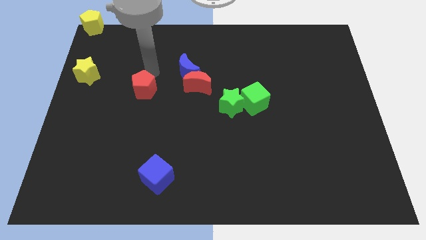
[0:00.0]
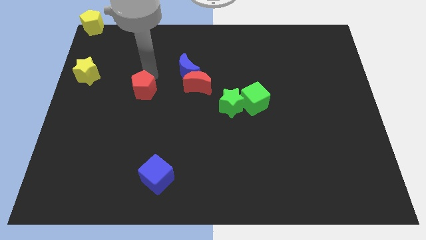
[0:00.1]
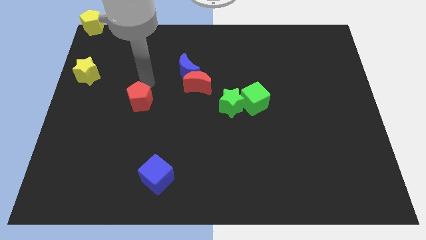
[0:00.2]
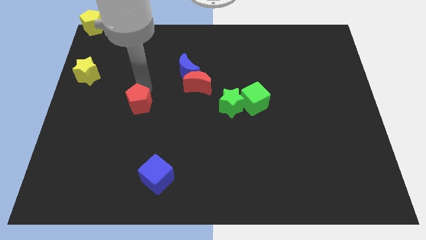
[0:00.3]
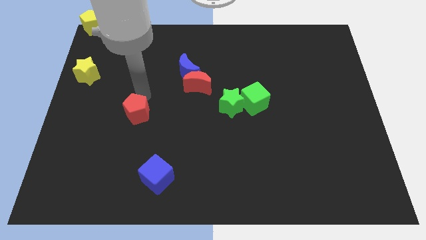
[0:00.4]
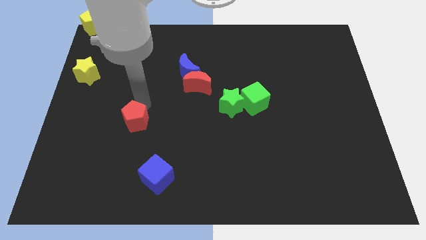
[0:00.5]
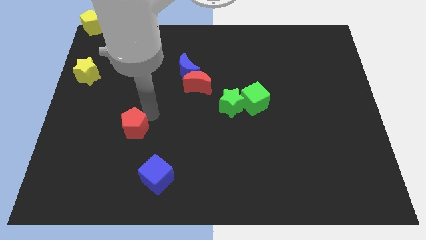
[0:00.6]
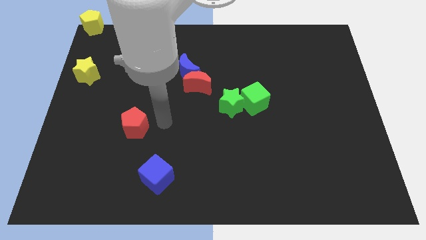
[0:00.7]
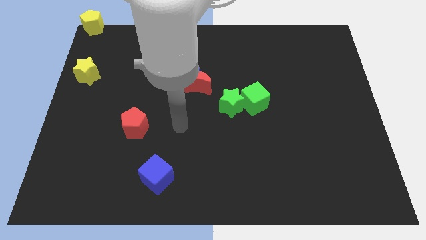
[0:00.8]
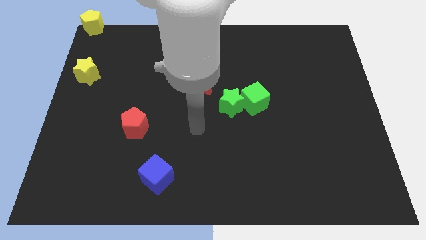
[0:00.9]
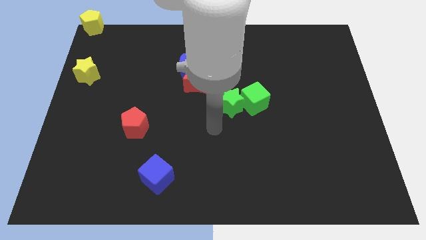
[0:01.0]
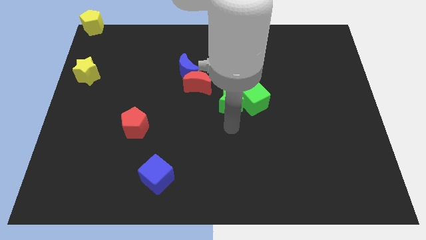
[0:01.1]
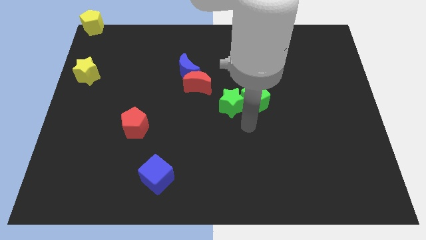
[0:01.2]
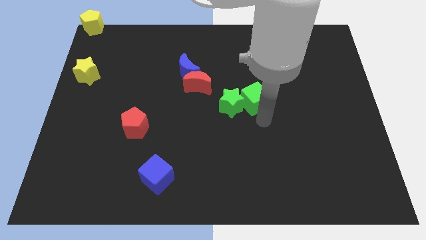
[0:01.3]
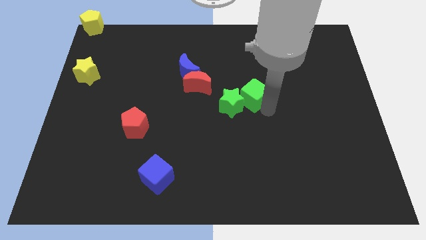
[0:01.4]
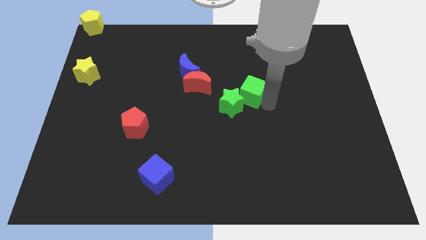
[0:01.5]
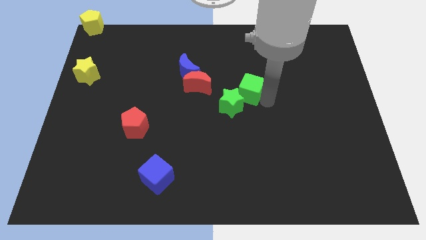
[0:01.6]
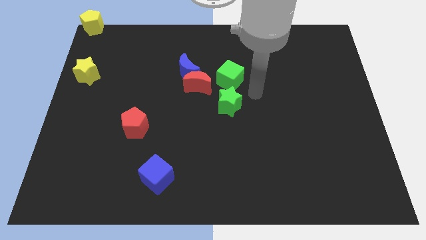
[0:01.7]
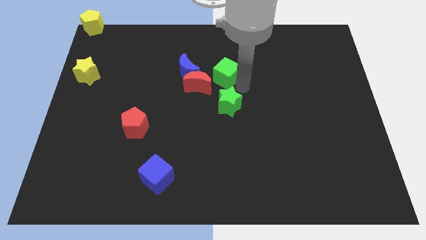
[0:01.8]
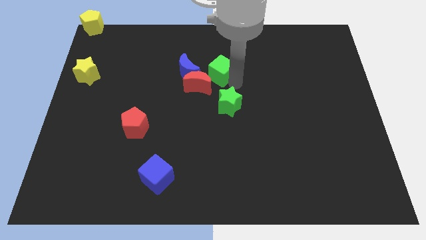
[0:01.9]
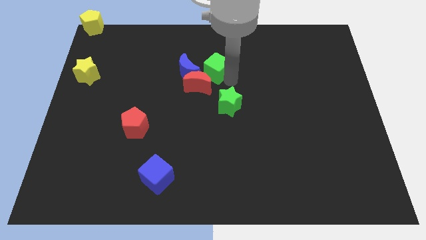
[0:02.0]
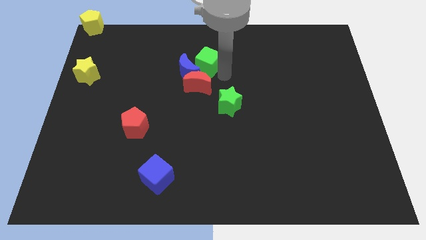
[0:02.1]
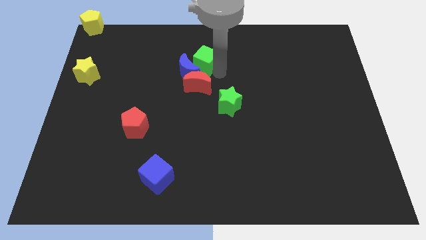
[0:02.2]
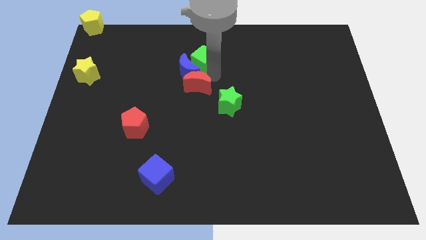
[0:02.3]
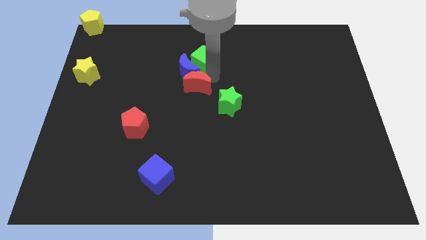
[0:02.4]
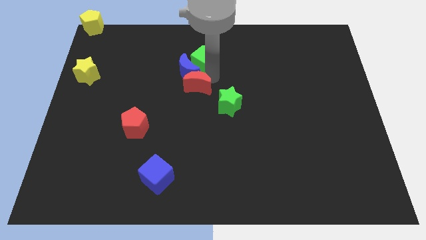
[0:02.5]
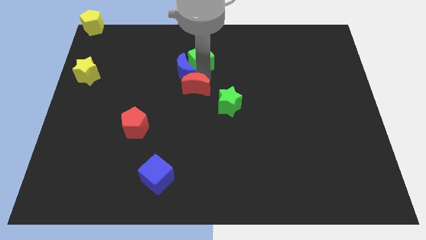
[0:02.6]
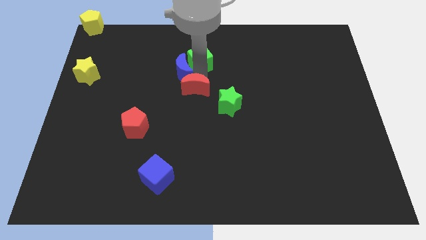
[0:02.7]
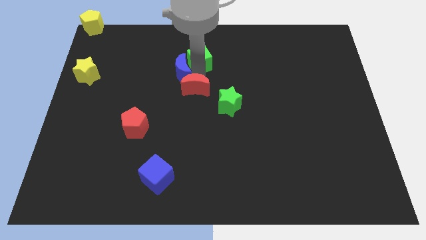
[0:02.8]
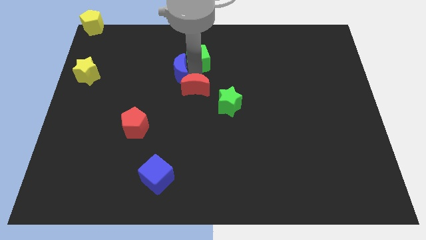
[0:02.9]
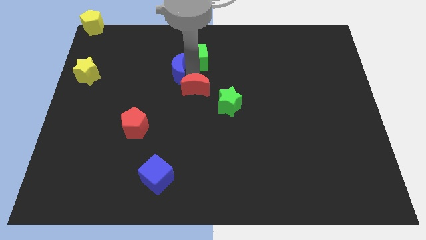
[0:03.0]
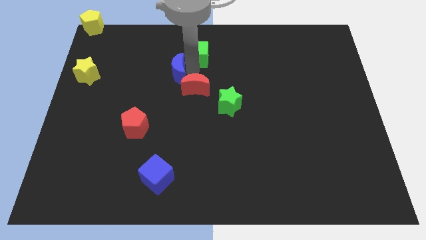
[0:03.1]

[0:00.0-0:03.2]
move the green cube to the right side of the blue crescent

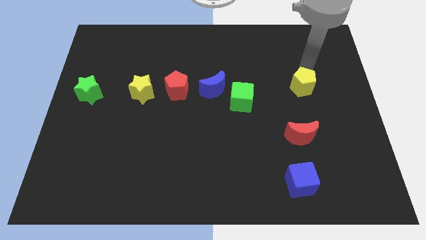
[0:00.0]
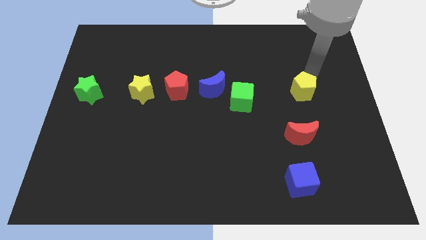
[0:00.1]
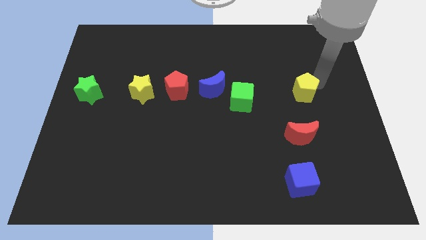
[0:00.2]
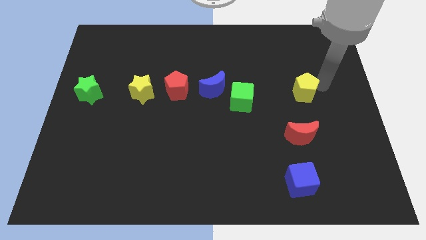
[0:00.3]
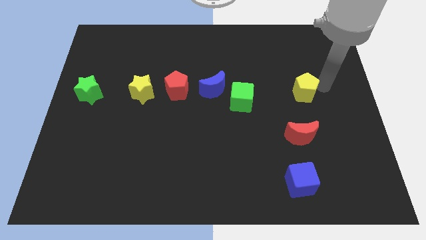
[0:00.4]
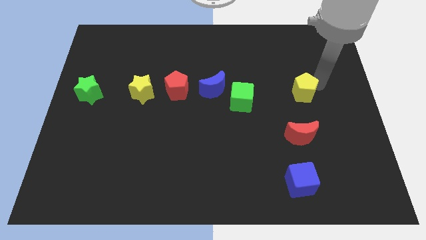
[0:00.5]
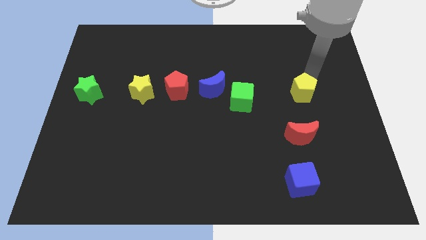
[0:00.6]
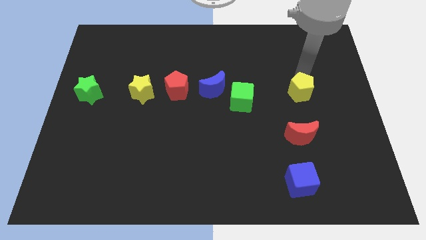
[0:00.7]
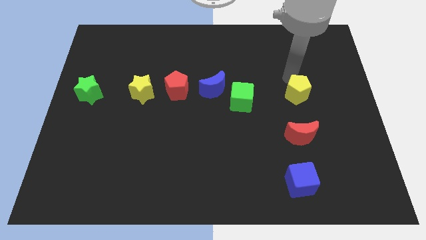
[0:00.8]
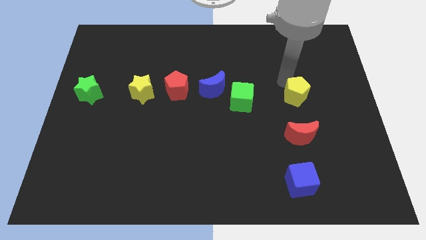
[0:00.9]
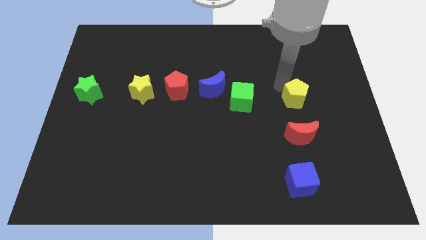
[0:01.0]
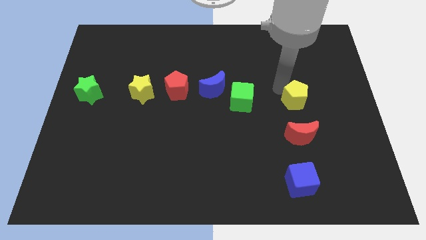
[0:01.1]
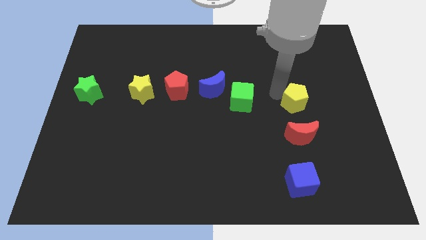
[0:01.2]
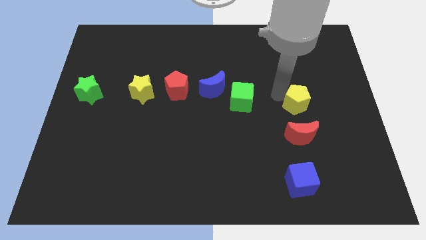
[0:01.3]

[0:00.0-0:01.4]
place the yellow pentagon above the red crescent

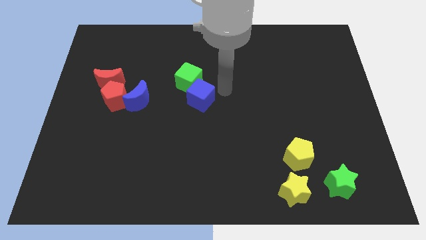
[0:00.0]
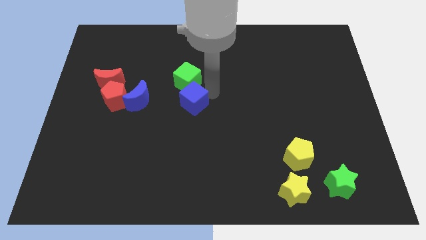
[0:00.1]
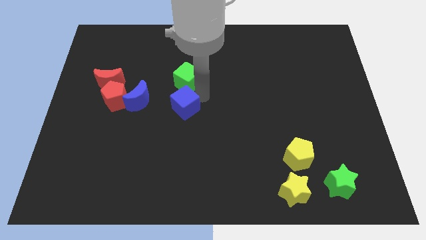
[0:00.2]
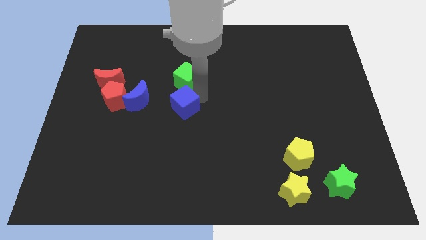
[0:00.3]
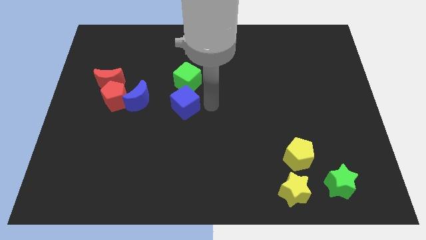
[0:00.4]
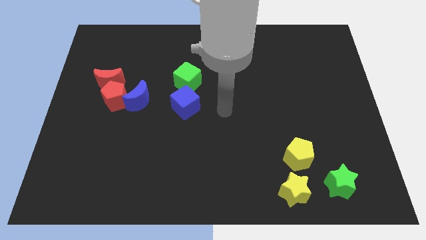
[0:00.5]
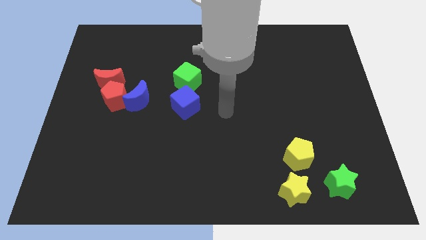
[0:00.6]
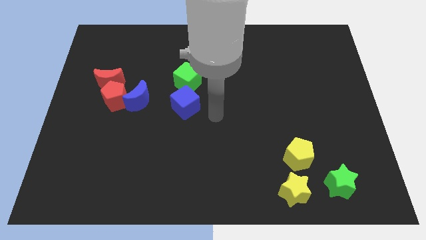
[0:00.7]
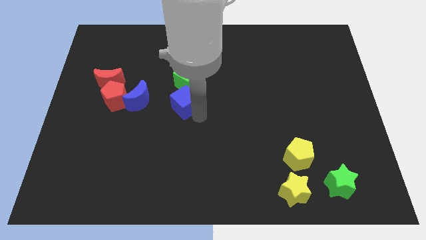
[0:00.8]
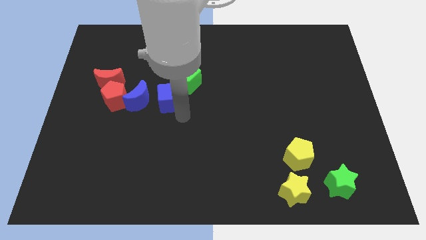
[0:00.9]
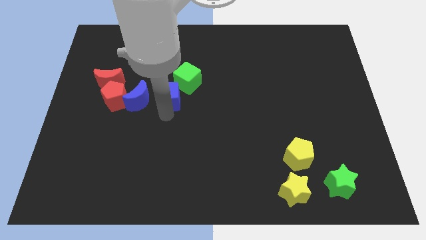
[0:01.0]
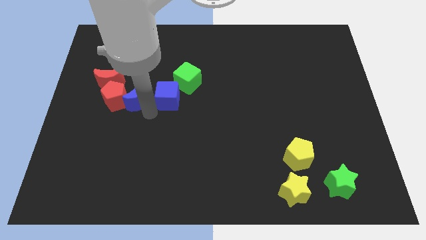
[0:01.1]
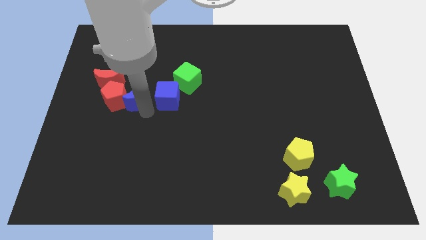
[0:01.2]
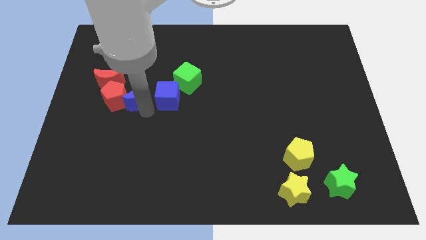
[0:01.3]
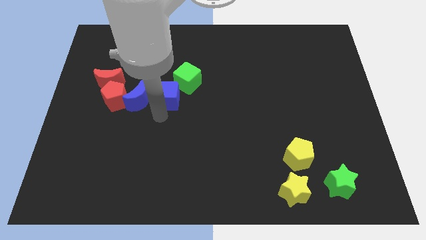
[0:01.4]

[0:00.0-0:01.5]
place the blue cube to the right side of the blue moon

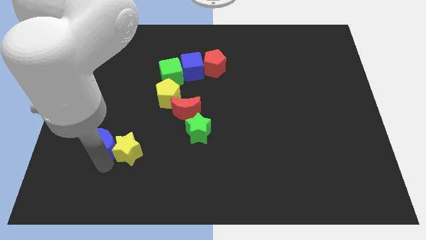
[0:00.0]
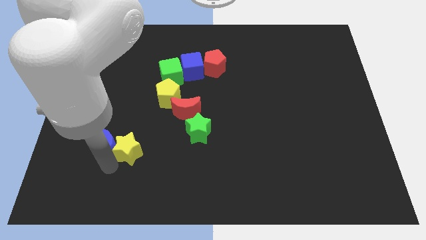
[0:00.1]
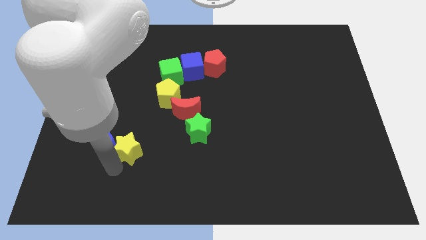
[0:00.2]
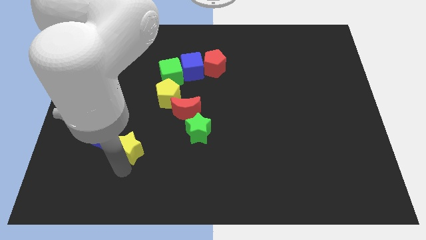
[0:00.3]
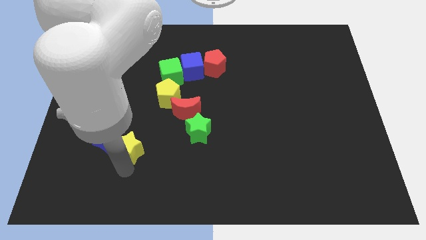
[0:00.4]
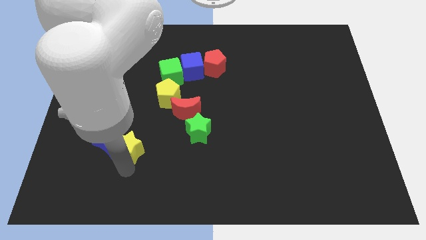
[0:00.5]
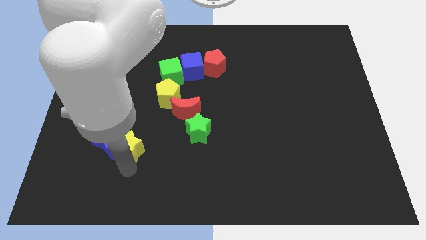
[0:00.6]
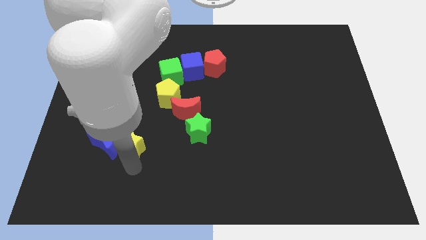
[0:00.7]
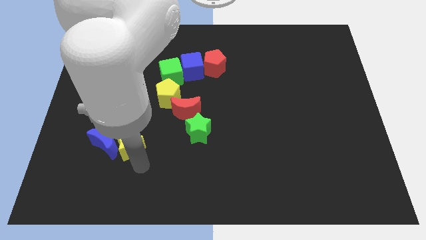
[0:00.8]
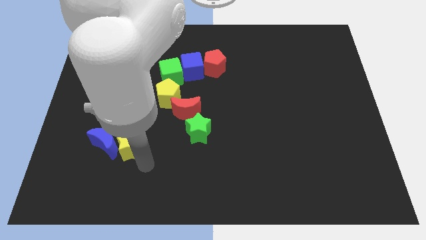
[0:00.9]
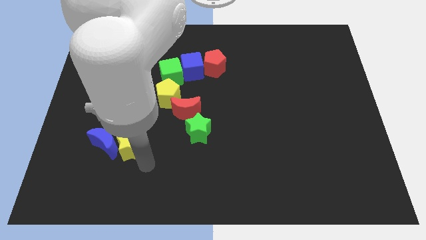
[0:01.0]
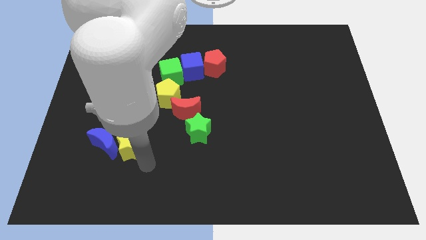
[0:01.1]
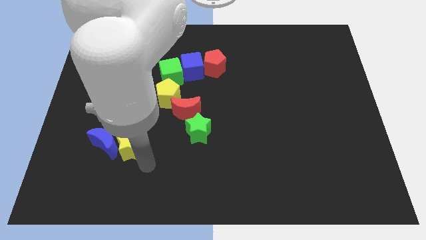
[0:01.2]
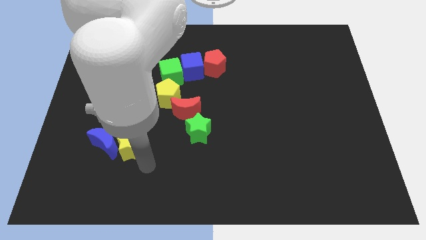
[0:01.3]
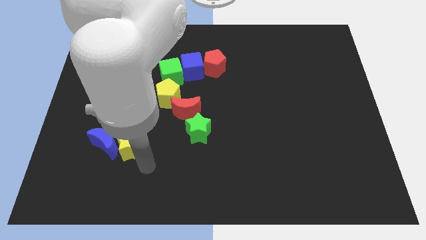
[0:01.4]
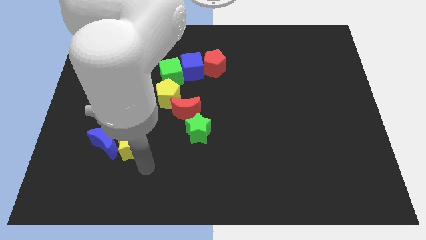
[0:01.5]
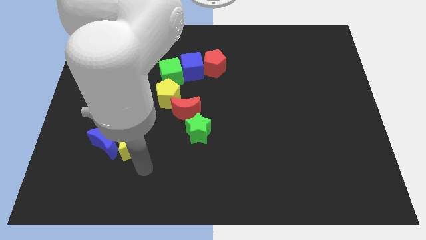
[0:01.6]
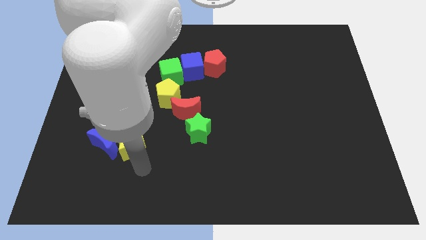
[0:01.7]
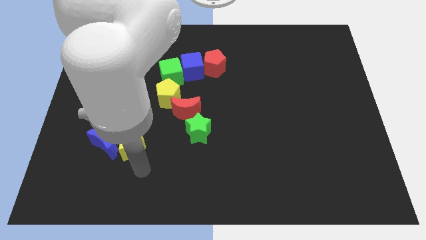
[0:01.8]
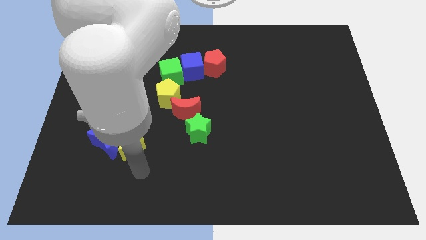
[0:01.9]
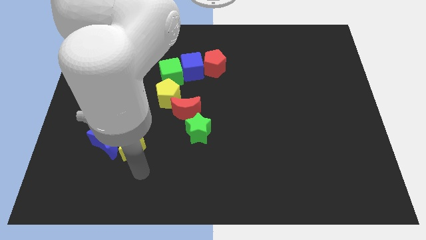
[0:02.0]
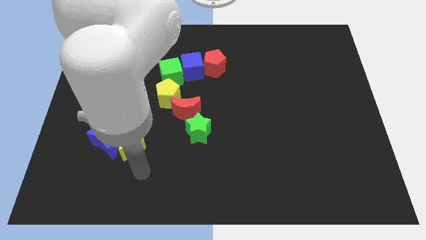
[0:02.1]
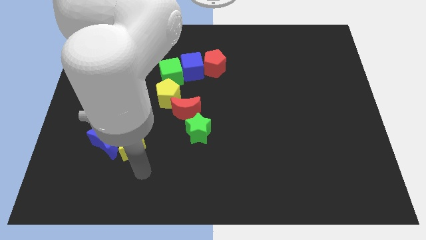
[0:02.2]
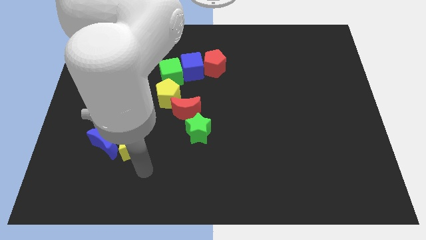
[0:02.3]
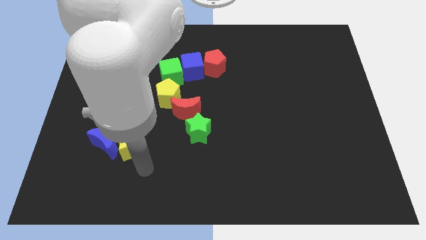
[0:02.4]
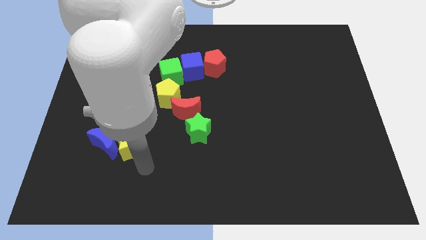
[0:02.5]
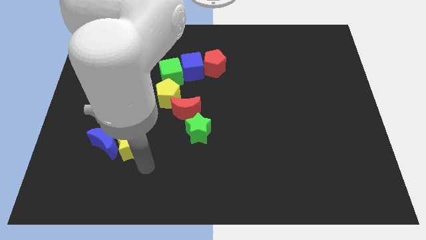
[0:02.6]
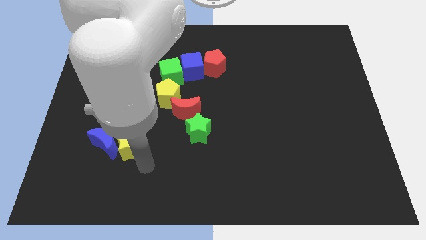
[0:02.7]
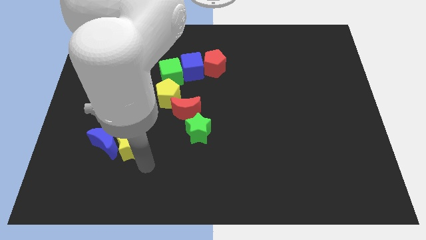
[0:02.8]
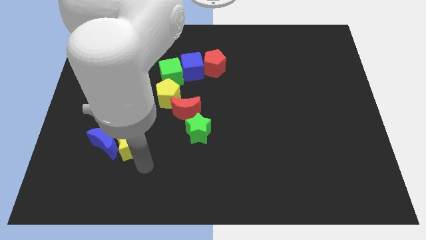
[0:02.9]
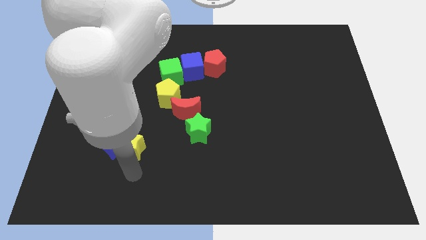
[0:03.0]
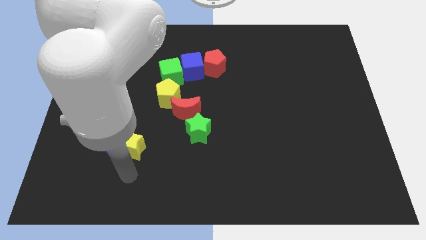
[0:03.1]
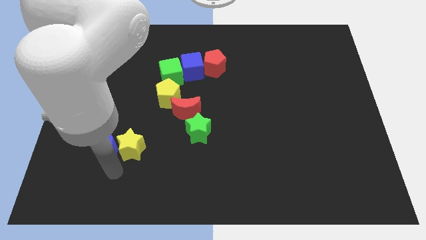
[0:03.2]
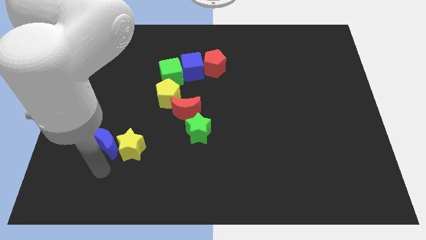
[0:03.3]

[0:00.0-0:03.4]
push the yellow star to the right side of the blue moon
